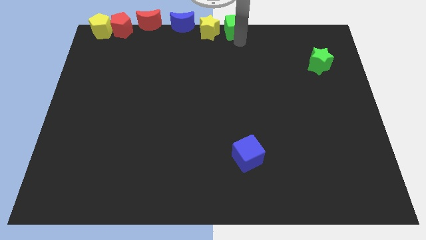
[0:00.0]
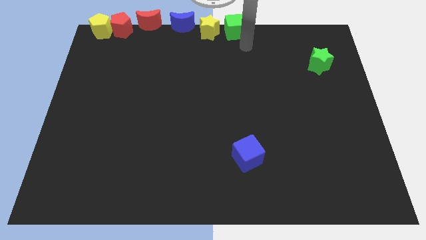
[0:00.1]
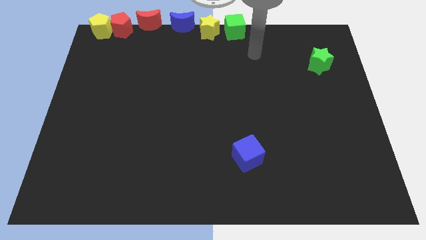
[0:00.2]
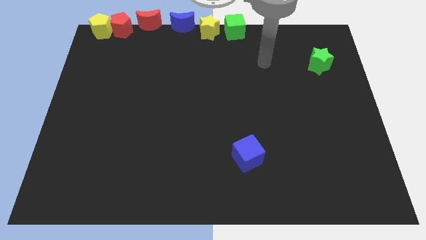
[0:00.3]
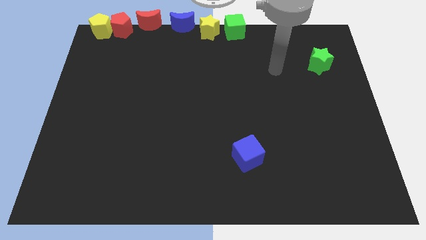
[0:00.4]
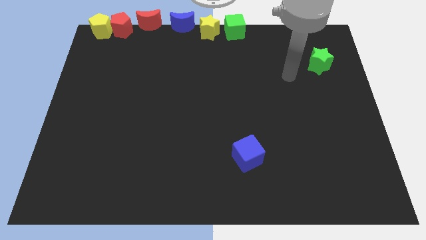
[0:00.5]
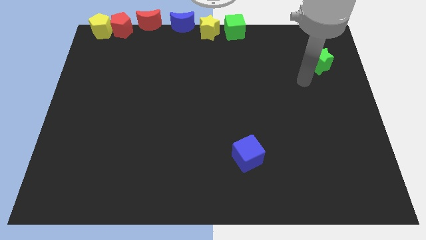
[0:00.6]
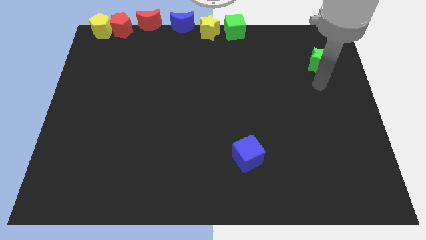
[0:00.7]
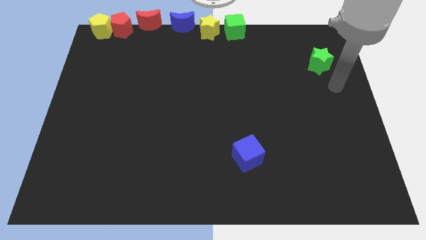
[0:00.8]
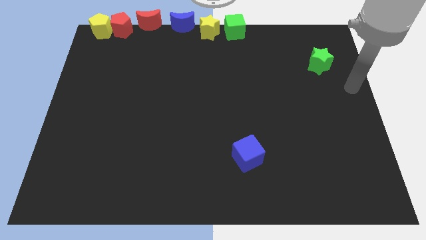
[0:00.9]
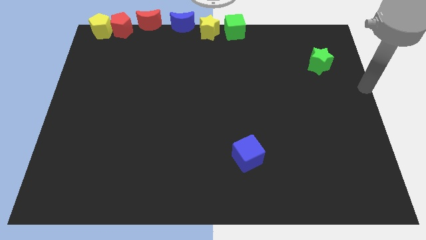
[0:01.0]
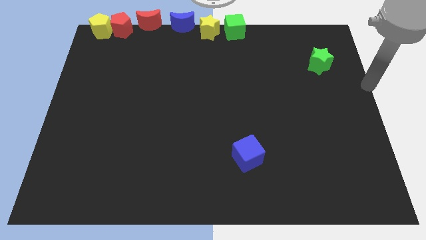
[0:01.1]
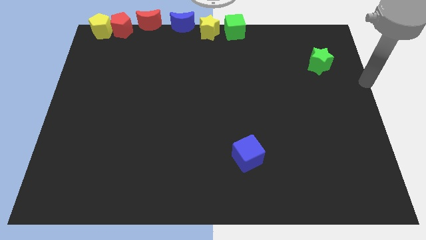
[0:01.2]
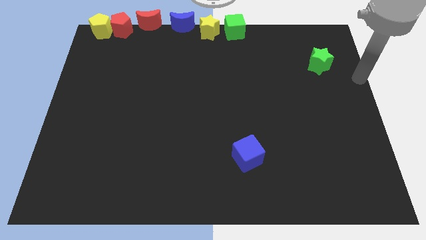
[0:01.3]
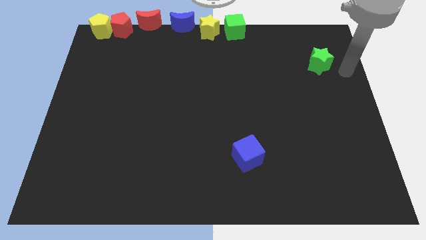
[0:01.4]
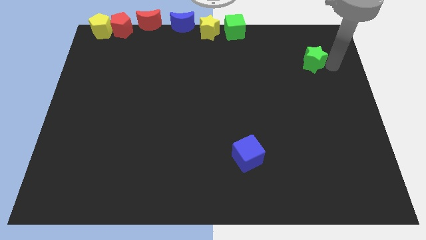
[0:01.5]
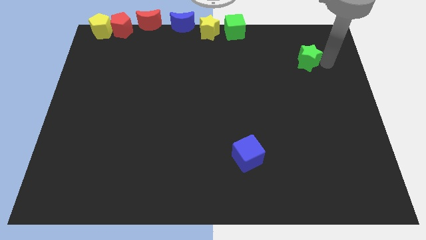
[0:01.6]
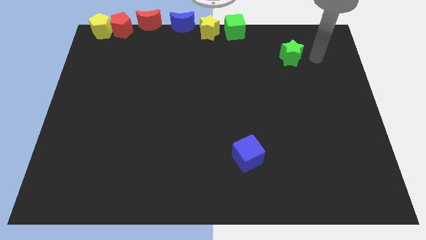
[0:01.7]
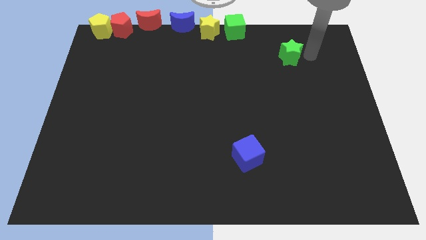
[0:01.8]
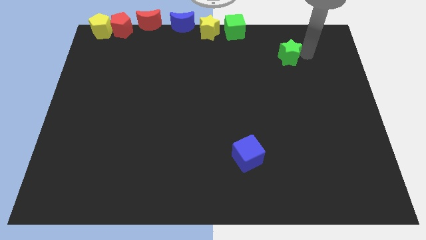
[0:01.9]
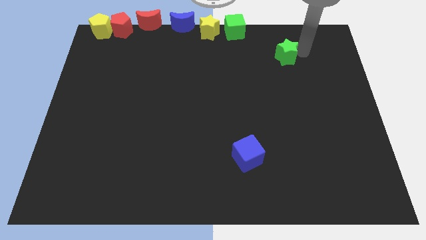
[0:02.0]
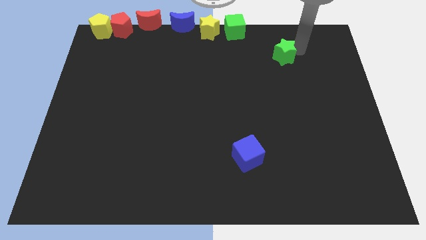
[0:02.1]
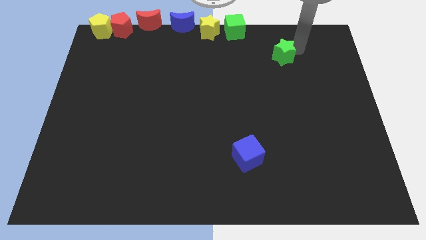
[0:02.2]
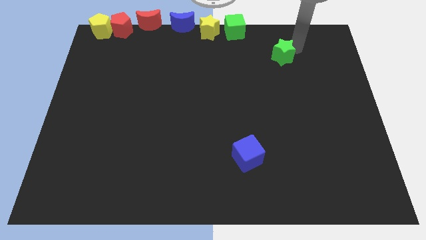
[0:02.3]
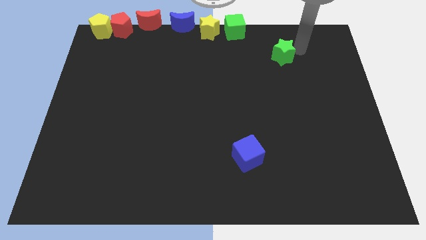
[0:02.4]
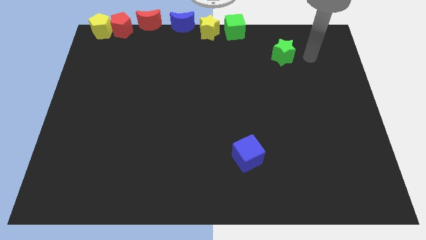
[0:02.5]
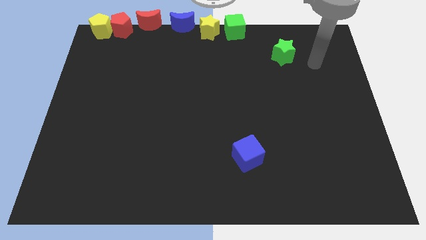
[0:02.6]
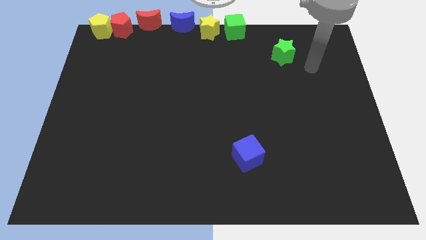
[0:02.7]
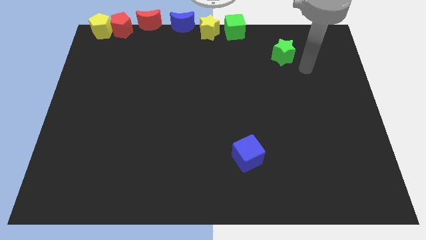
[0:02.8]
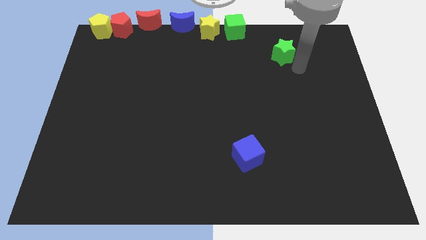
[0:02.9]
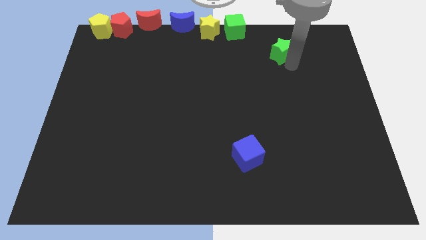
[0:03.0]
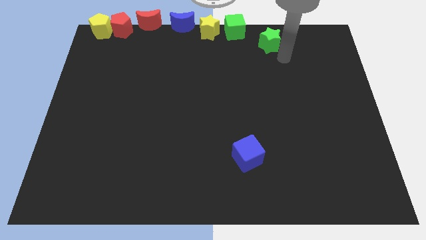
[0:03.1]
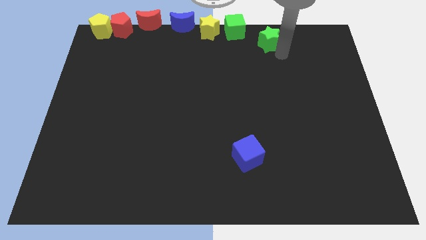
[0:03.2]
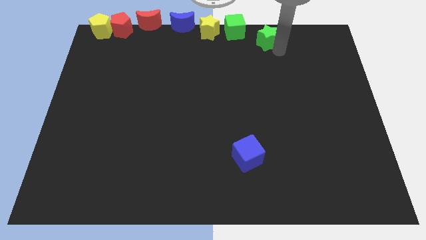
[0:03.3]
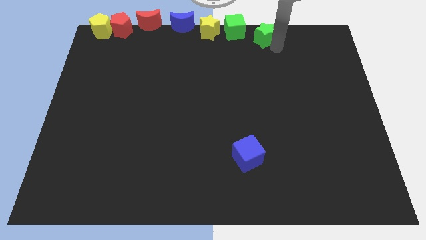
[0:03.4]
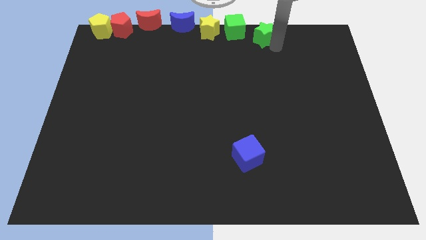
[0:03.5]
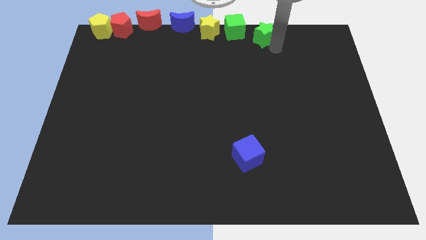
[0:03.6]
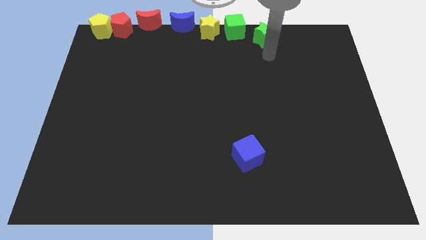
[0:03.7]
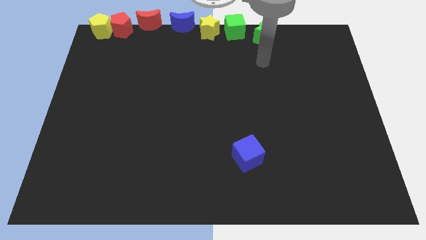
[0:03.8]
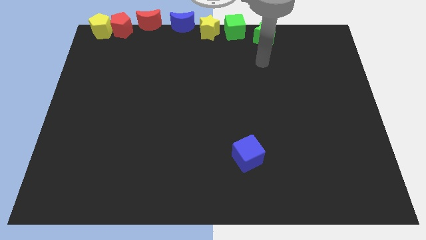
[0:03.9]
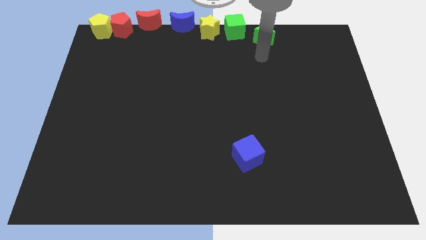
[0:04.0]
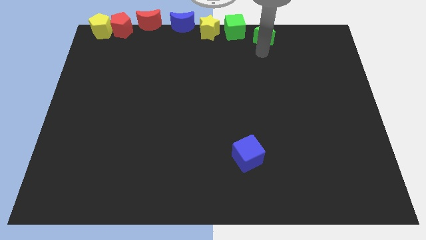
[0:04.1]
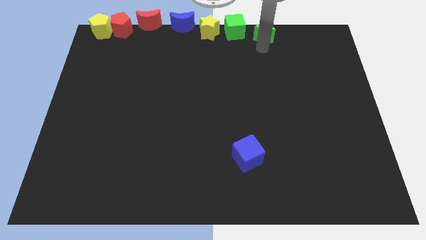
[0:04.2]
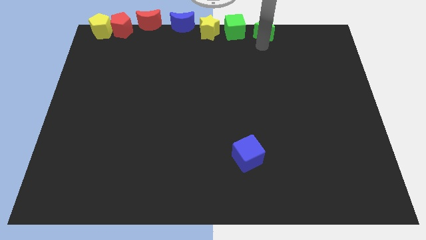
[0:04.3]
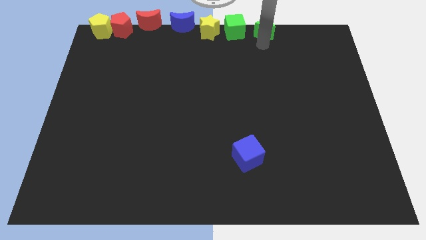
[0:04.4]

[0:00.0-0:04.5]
push the green star to the right of the green cube

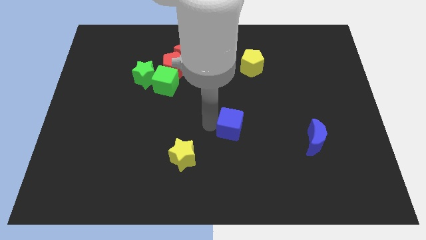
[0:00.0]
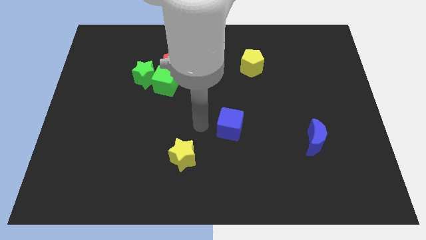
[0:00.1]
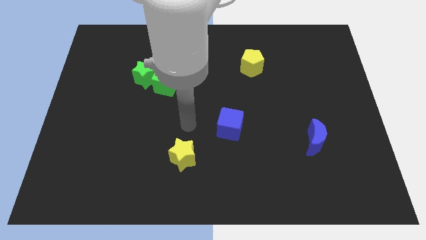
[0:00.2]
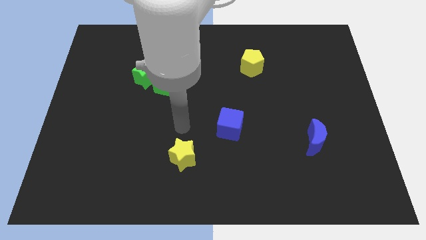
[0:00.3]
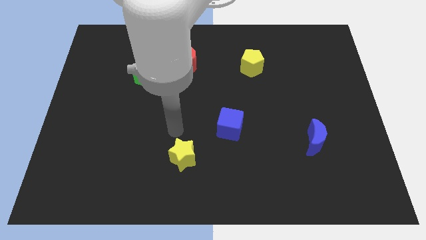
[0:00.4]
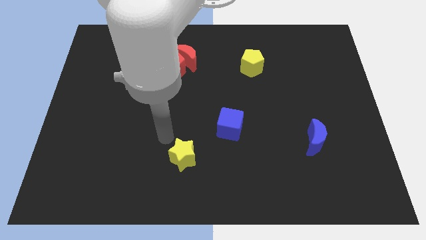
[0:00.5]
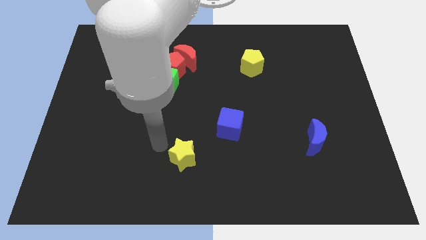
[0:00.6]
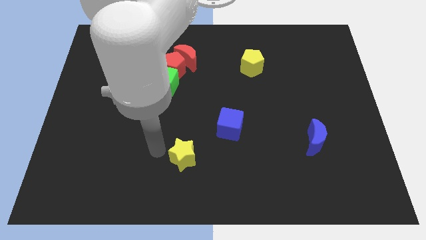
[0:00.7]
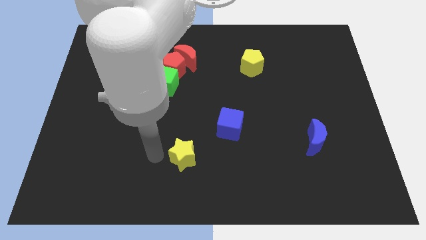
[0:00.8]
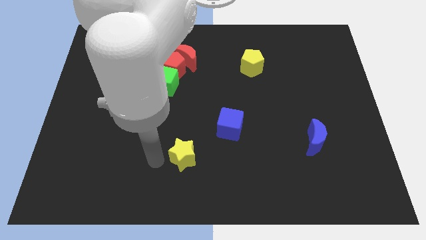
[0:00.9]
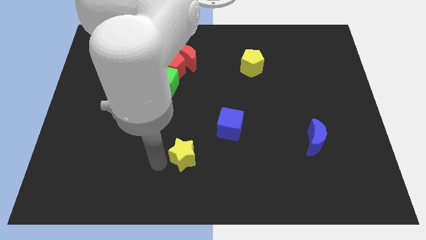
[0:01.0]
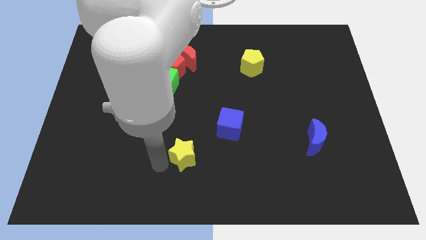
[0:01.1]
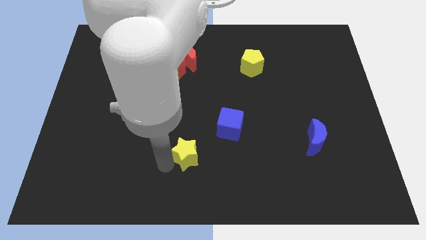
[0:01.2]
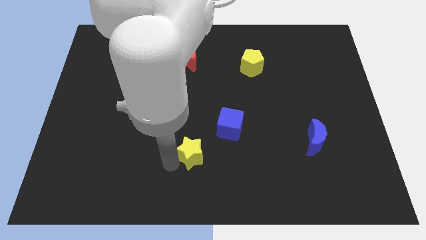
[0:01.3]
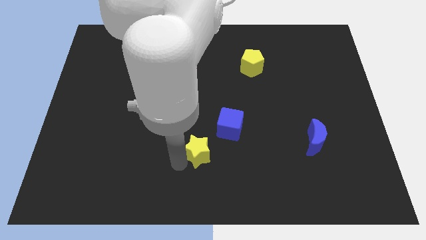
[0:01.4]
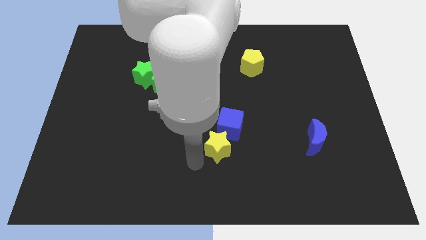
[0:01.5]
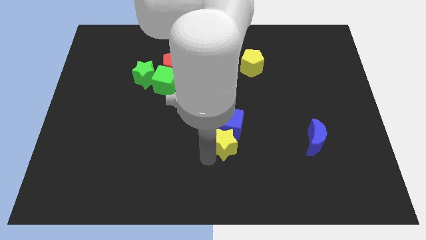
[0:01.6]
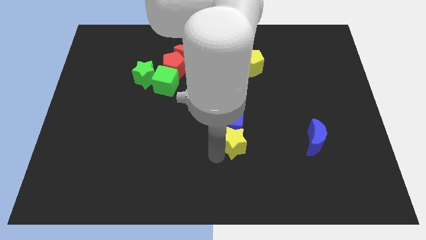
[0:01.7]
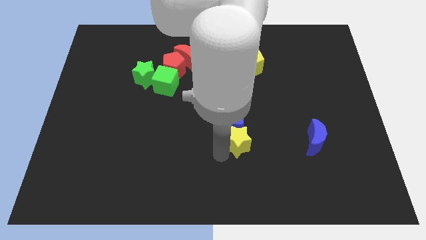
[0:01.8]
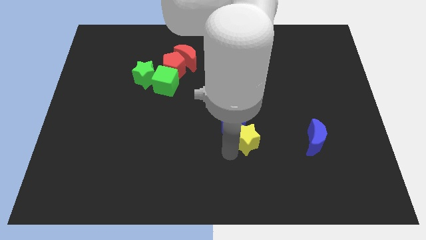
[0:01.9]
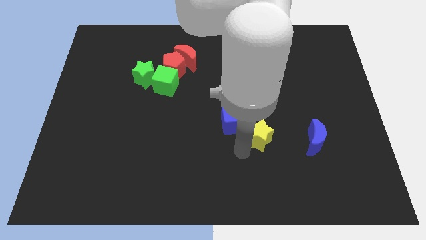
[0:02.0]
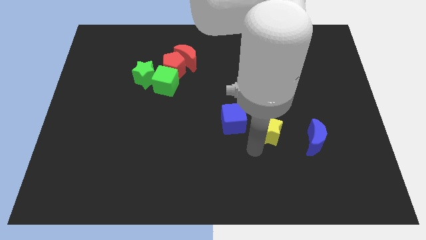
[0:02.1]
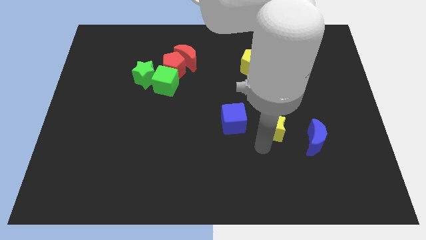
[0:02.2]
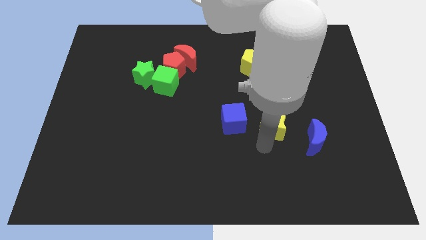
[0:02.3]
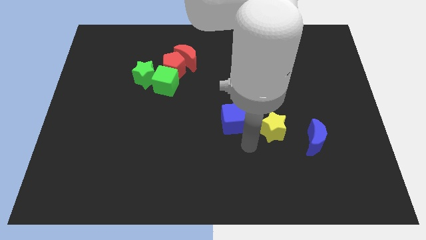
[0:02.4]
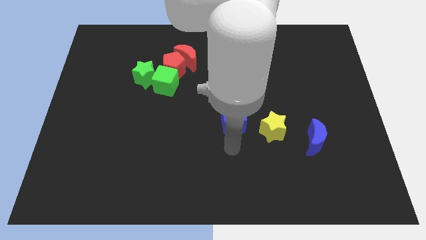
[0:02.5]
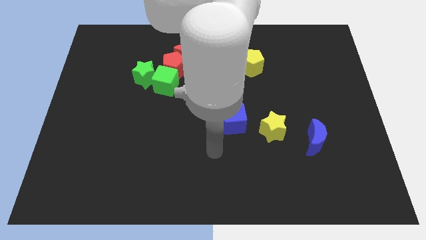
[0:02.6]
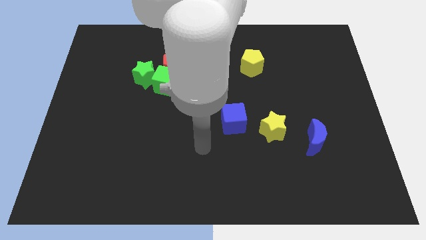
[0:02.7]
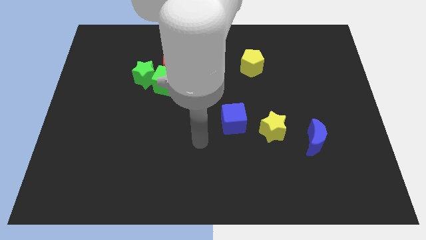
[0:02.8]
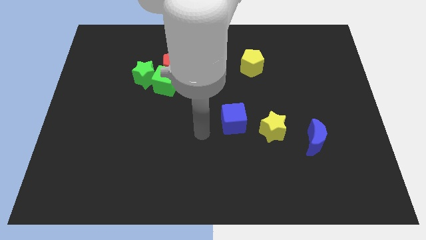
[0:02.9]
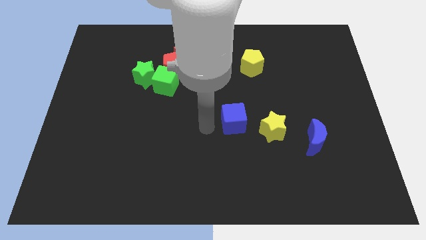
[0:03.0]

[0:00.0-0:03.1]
put the yellow star in between the blue cube and blue moon

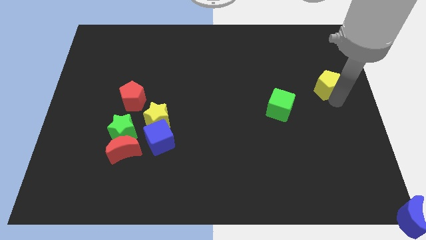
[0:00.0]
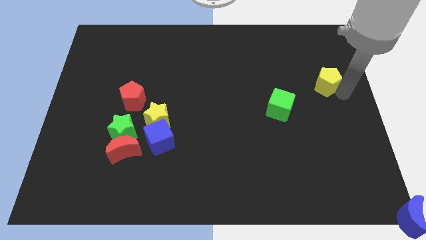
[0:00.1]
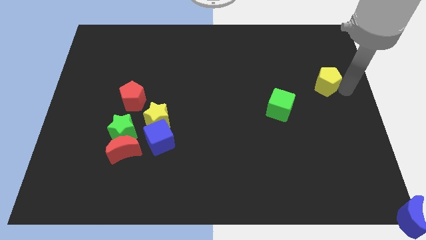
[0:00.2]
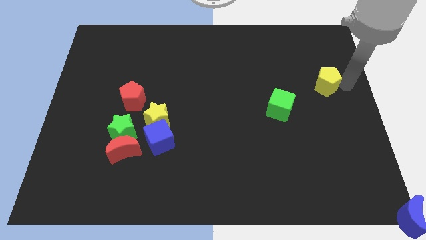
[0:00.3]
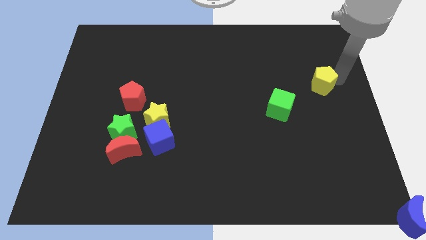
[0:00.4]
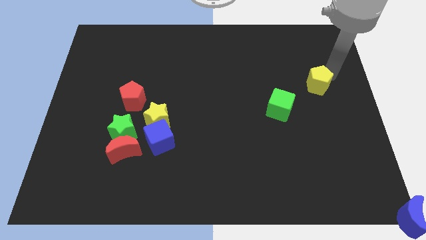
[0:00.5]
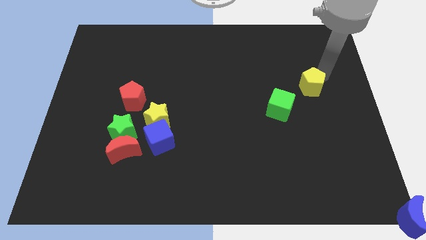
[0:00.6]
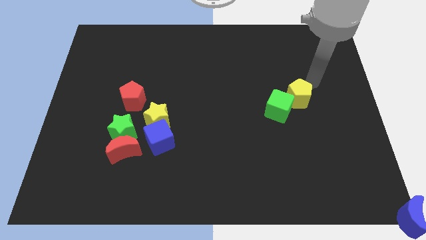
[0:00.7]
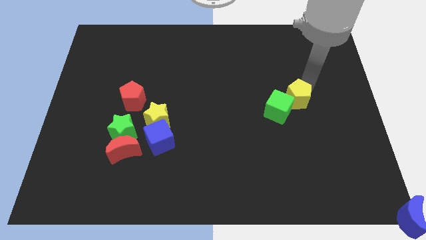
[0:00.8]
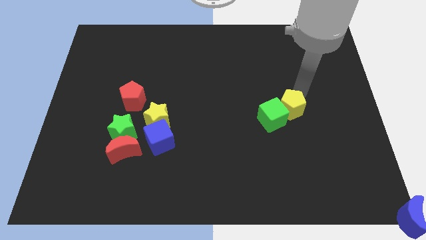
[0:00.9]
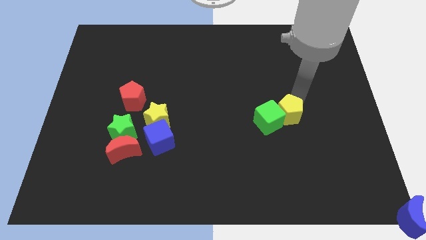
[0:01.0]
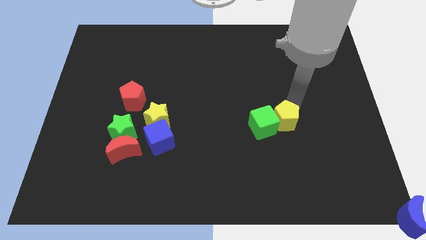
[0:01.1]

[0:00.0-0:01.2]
push the green cube with yellow pentagon

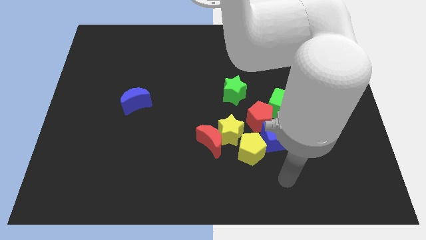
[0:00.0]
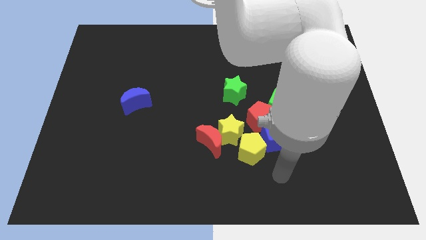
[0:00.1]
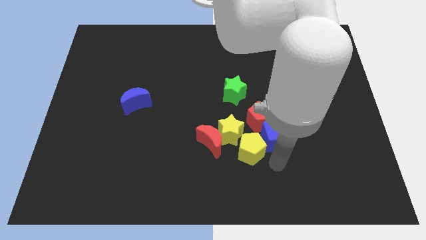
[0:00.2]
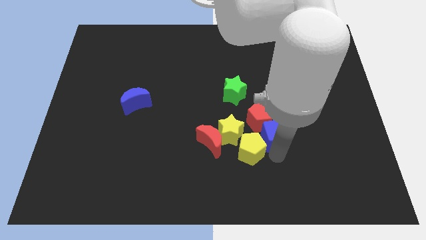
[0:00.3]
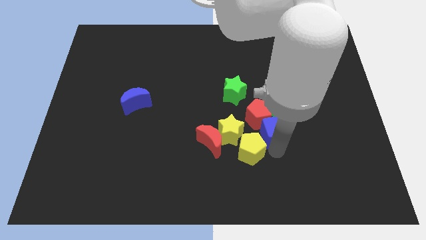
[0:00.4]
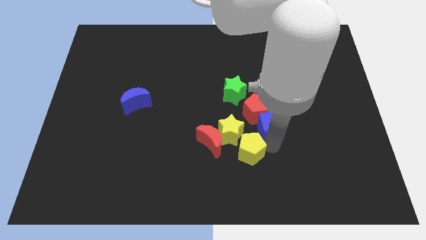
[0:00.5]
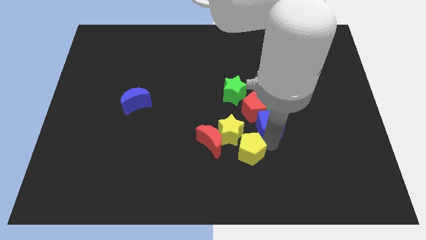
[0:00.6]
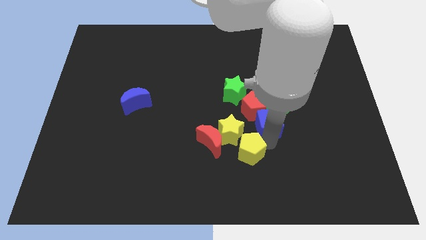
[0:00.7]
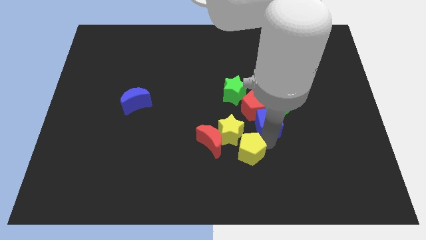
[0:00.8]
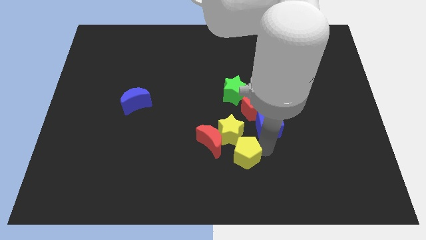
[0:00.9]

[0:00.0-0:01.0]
move the red pentagon upwards slightly with the blue cube
